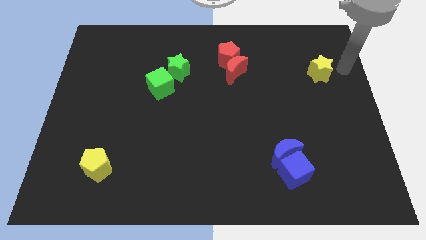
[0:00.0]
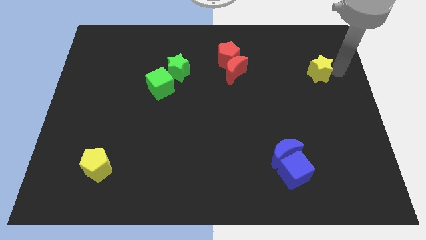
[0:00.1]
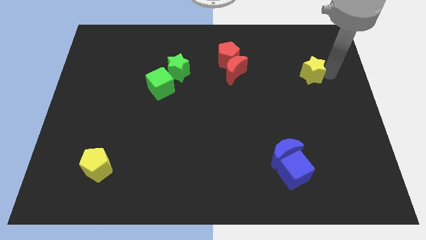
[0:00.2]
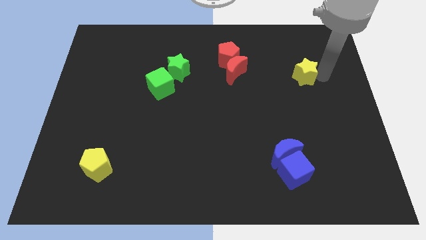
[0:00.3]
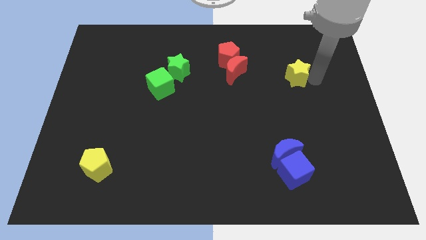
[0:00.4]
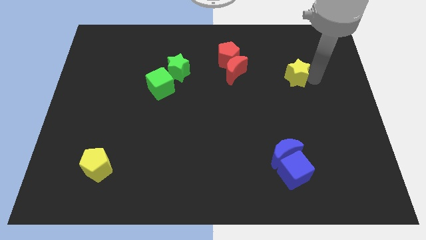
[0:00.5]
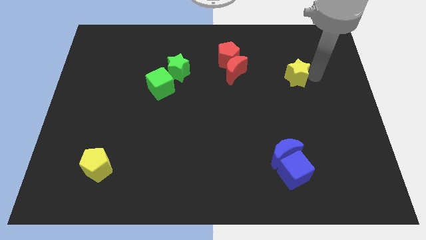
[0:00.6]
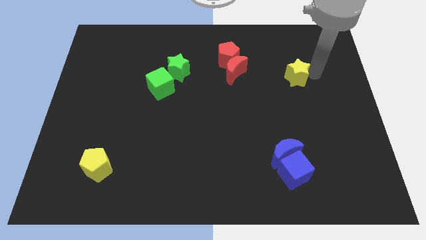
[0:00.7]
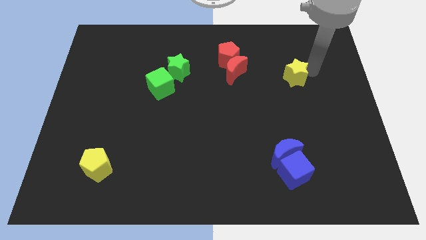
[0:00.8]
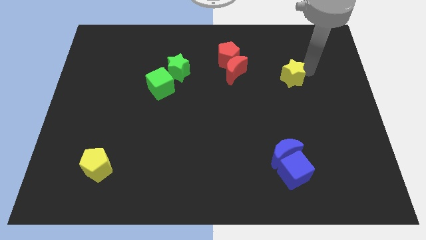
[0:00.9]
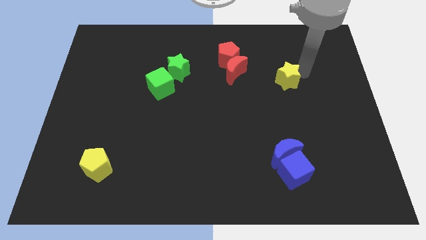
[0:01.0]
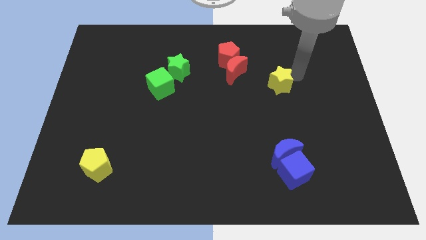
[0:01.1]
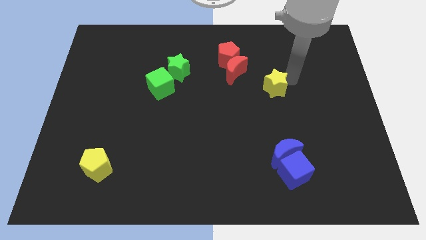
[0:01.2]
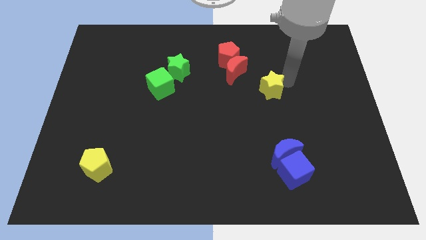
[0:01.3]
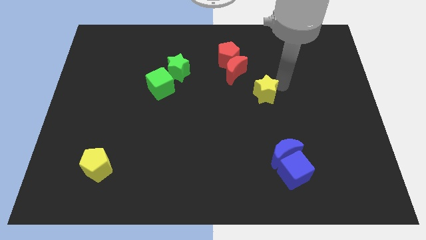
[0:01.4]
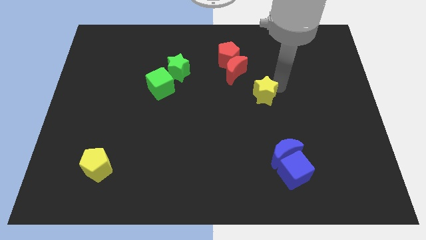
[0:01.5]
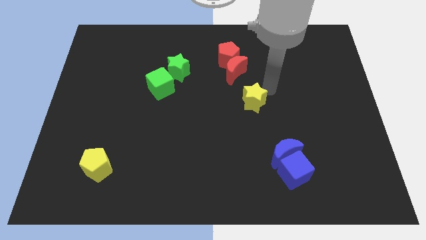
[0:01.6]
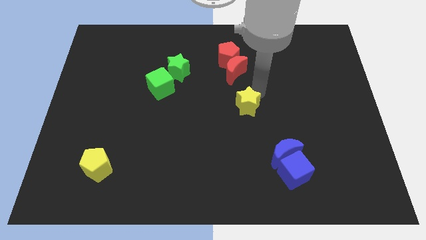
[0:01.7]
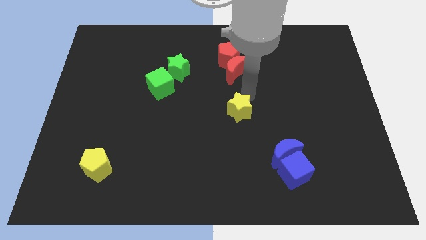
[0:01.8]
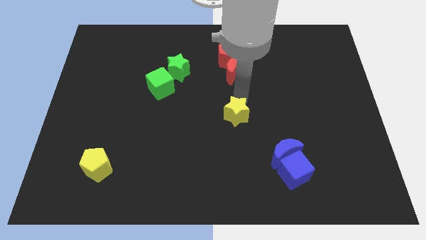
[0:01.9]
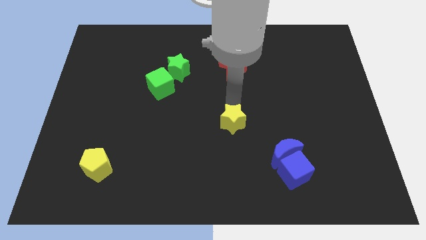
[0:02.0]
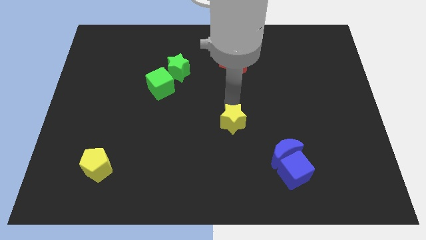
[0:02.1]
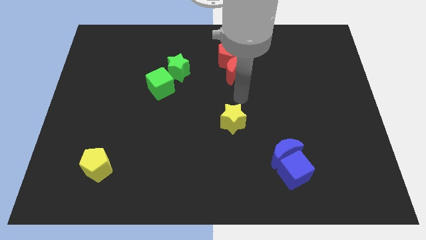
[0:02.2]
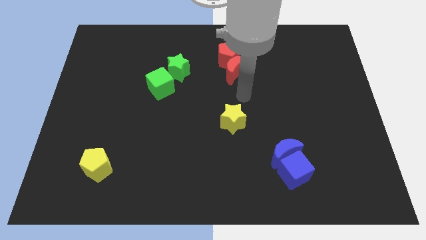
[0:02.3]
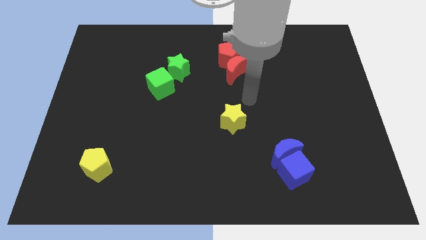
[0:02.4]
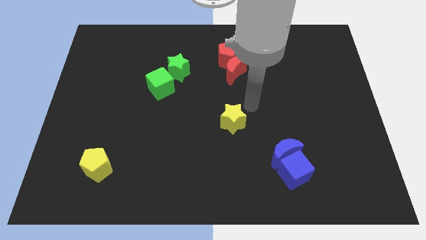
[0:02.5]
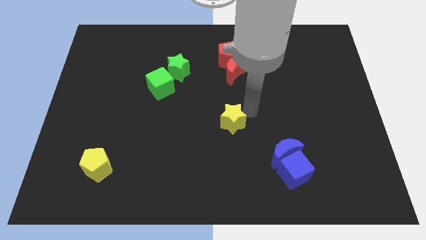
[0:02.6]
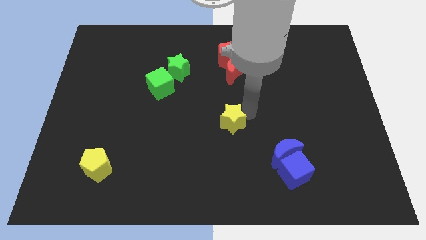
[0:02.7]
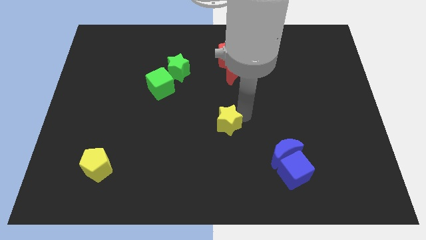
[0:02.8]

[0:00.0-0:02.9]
place yellow star to the center of the board

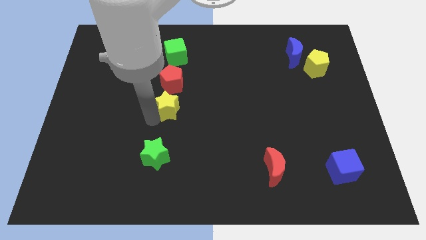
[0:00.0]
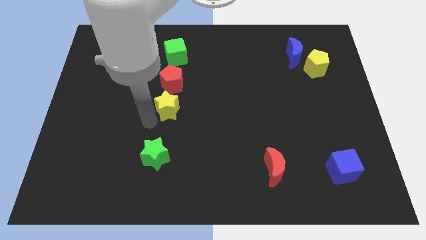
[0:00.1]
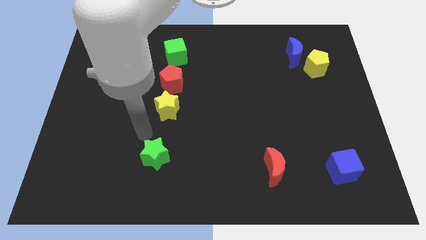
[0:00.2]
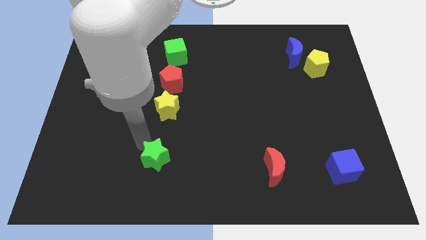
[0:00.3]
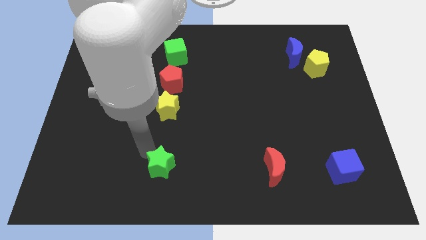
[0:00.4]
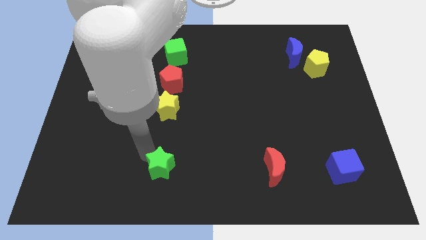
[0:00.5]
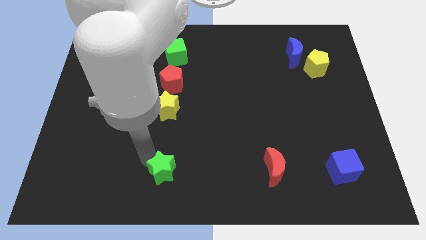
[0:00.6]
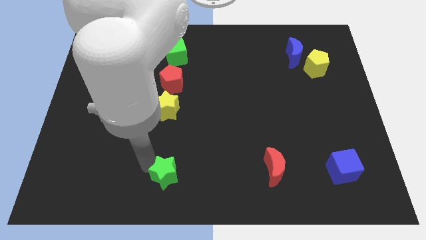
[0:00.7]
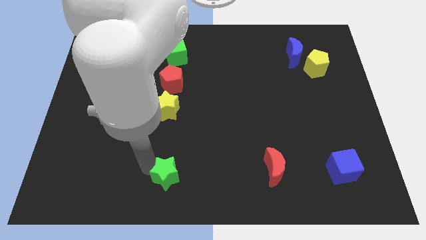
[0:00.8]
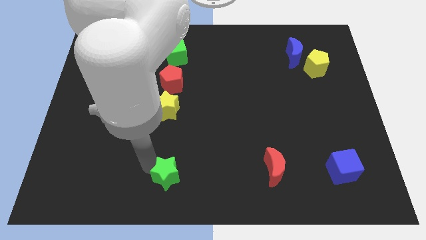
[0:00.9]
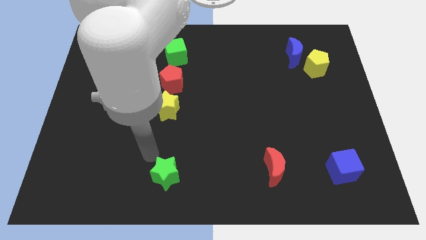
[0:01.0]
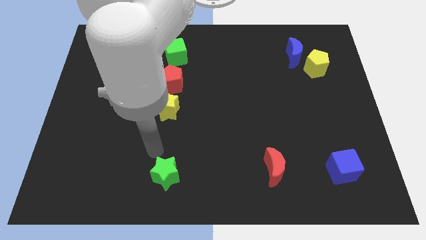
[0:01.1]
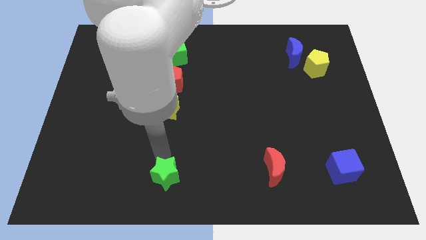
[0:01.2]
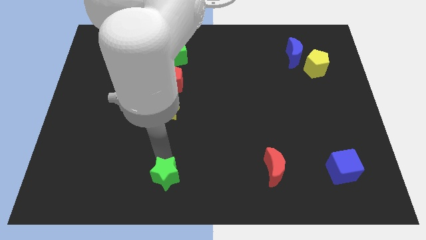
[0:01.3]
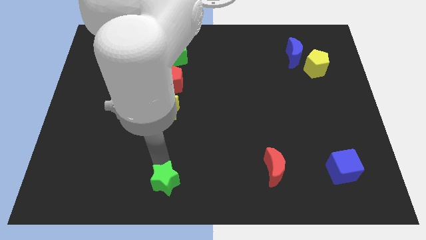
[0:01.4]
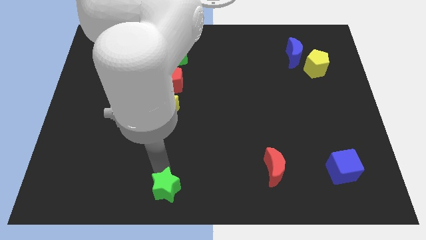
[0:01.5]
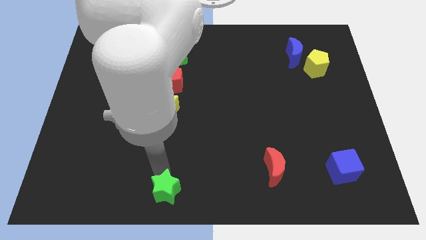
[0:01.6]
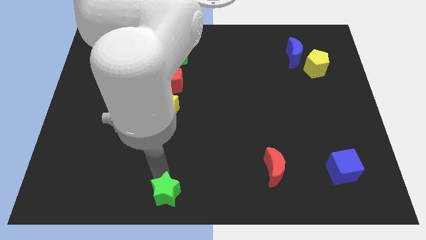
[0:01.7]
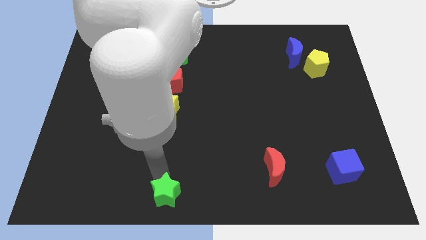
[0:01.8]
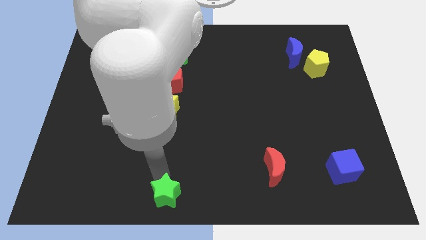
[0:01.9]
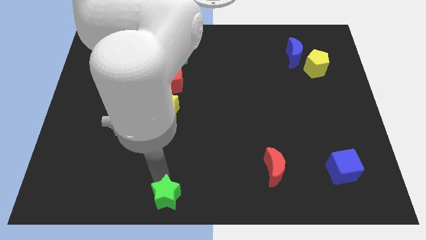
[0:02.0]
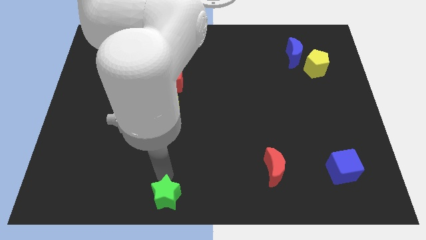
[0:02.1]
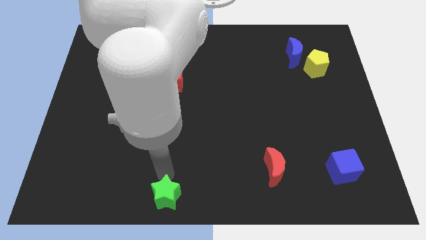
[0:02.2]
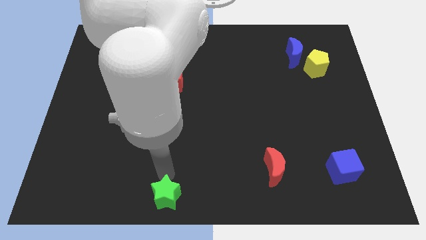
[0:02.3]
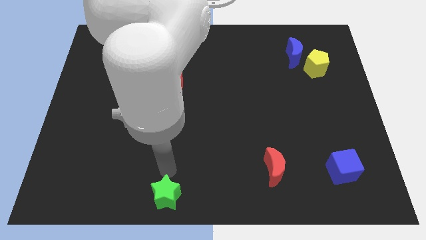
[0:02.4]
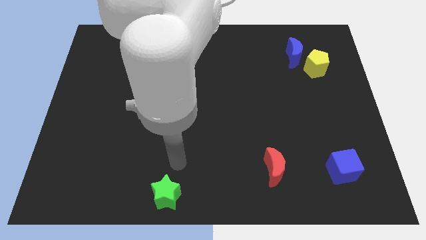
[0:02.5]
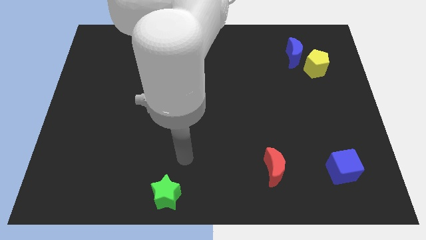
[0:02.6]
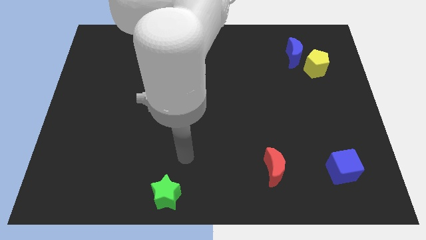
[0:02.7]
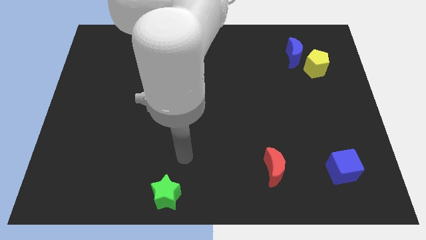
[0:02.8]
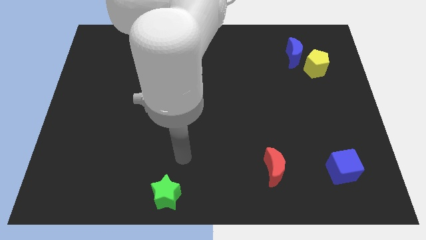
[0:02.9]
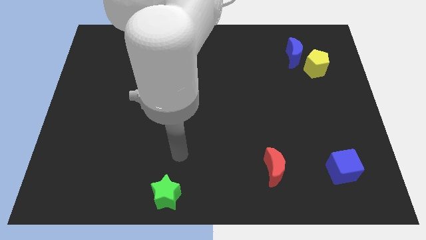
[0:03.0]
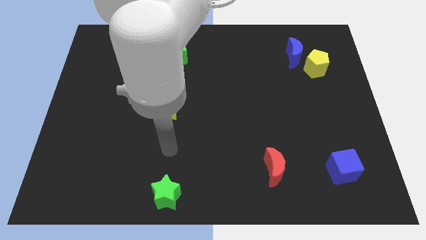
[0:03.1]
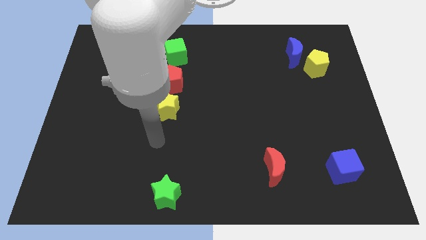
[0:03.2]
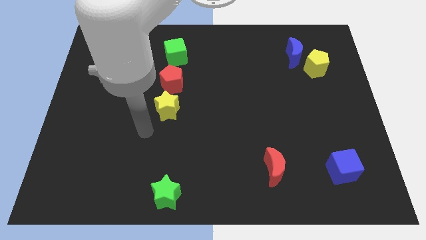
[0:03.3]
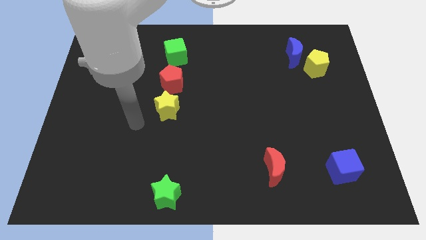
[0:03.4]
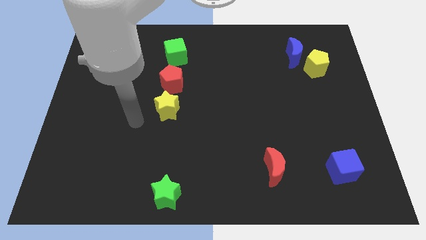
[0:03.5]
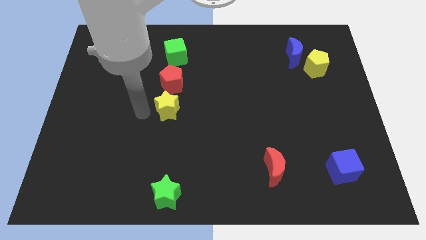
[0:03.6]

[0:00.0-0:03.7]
push the green star towards down

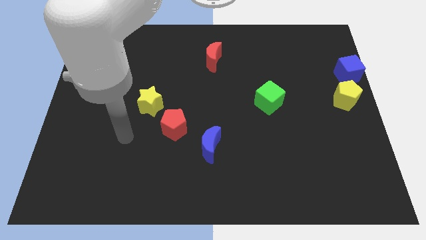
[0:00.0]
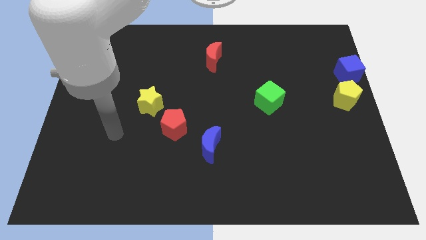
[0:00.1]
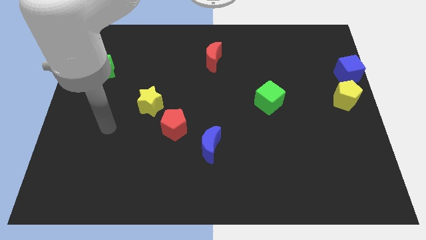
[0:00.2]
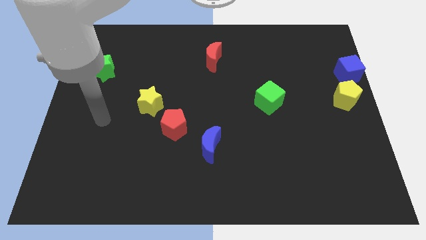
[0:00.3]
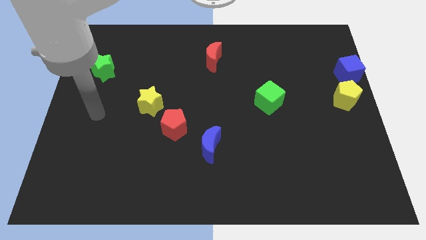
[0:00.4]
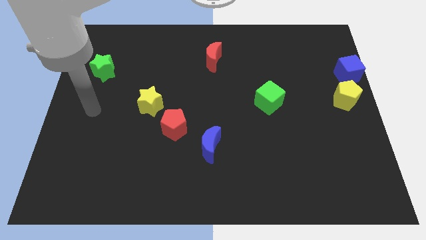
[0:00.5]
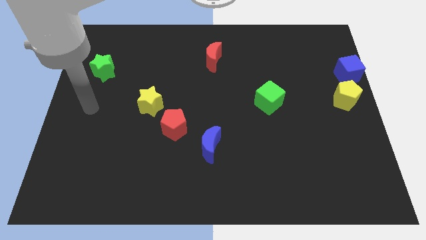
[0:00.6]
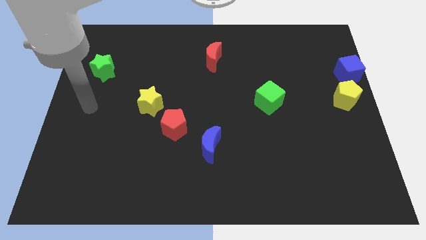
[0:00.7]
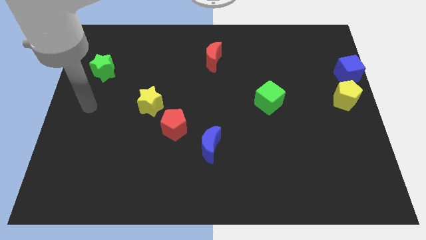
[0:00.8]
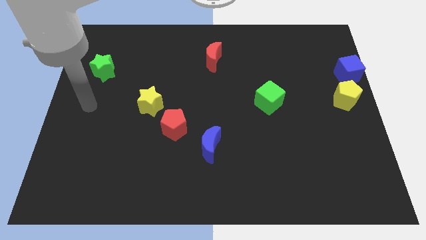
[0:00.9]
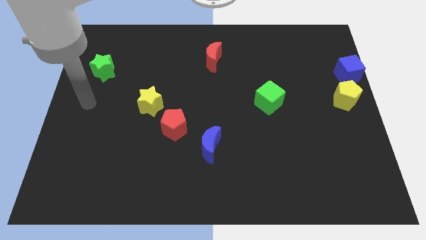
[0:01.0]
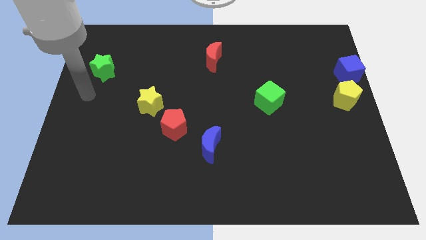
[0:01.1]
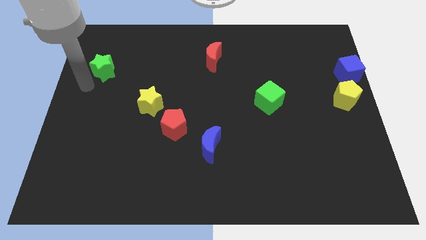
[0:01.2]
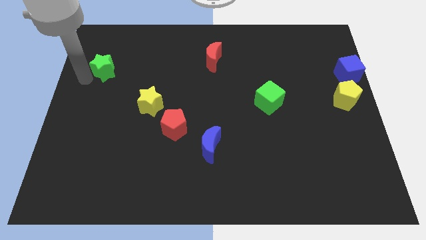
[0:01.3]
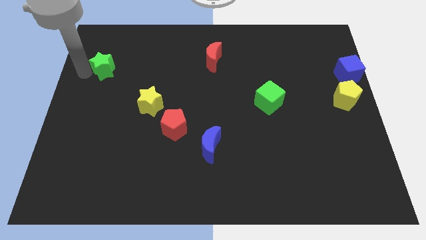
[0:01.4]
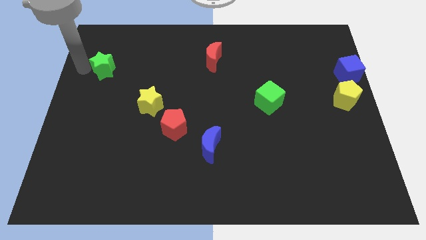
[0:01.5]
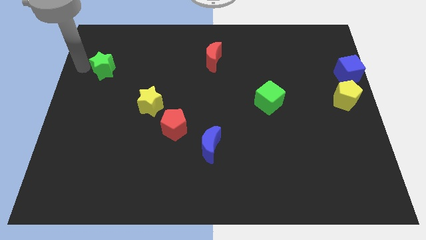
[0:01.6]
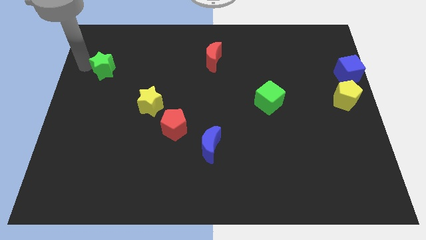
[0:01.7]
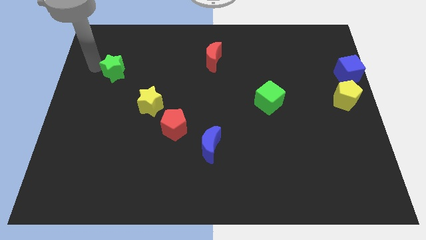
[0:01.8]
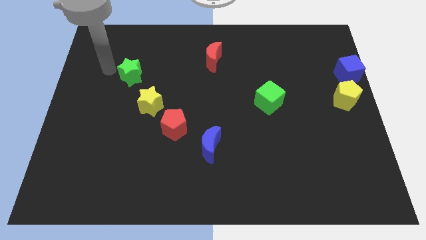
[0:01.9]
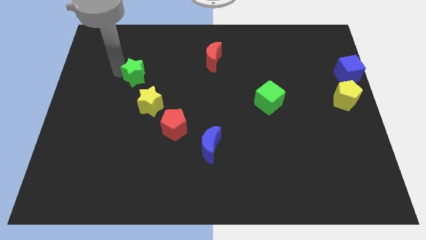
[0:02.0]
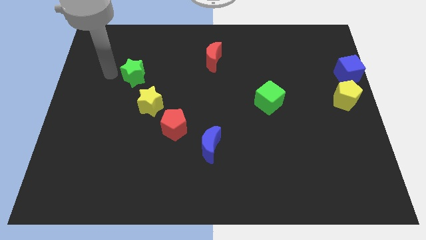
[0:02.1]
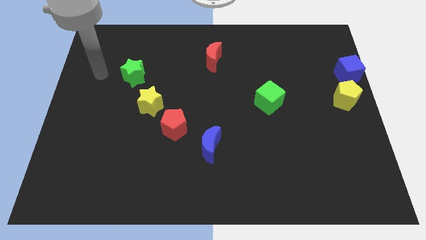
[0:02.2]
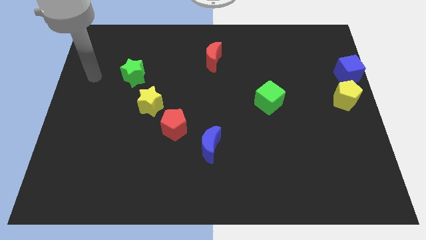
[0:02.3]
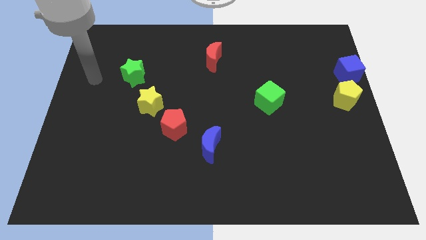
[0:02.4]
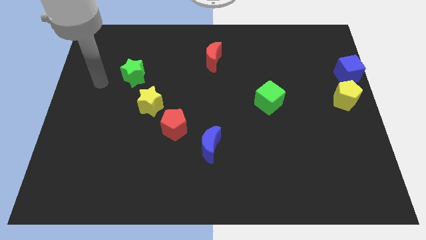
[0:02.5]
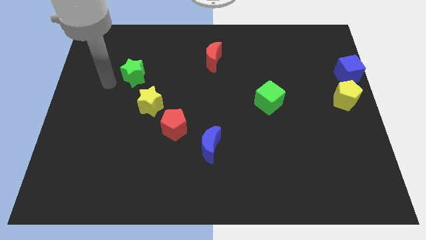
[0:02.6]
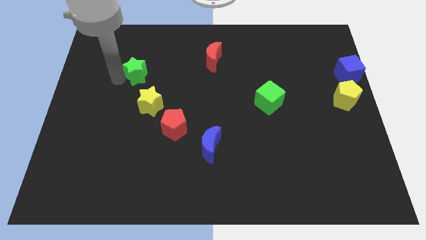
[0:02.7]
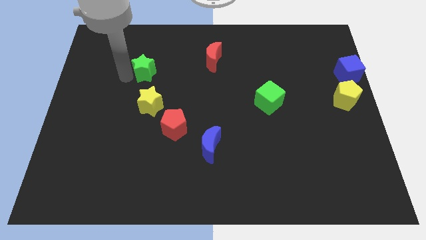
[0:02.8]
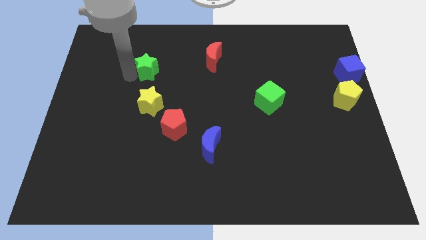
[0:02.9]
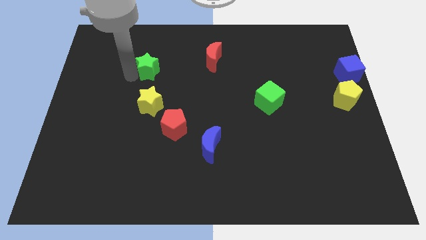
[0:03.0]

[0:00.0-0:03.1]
push the green star to the top of the yellow star
